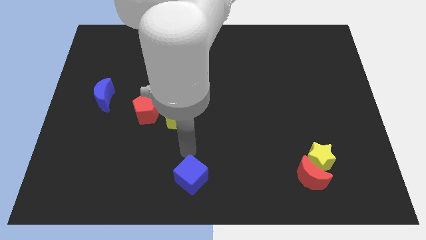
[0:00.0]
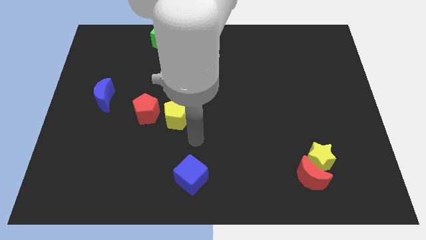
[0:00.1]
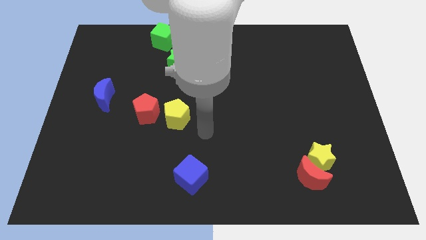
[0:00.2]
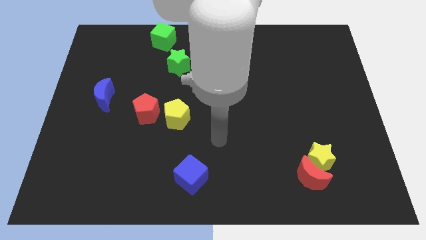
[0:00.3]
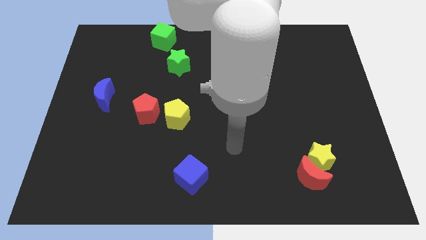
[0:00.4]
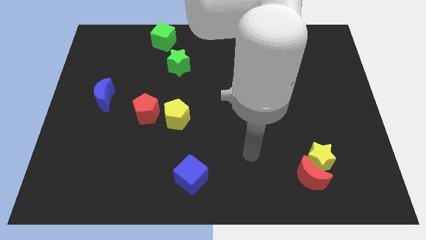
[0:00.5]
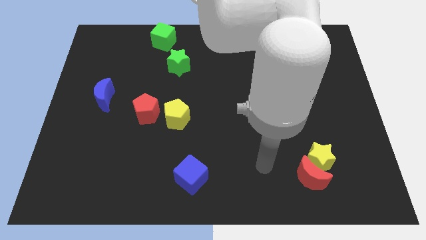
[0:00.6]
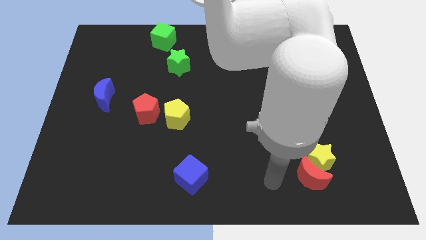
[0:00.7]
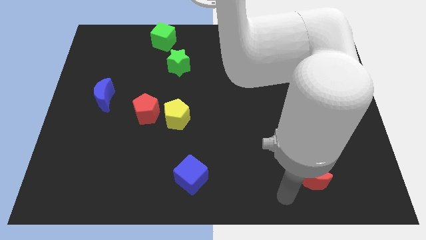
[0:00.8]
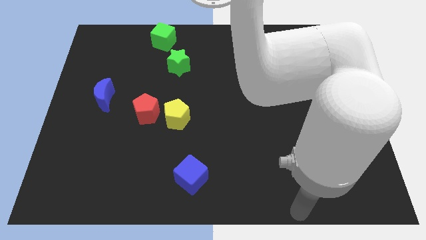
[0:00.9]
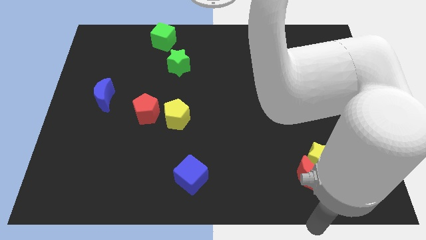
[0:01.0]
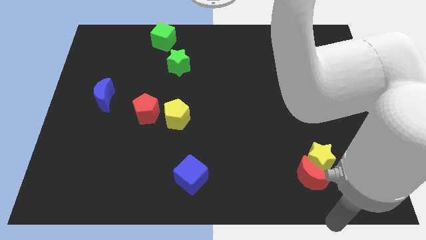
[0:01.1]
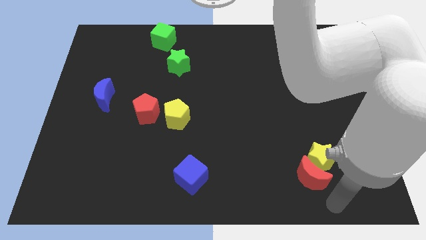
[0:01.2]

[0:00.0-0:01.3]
point your arm below the red moon and yellow star

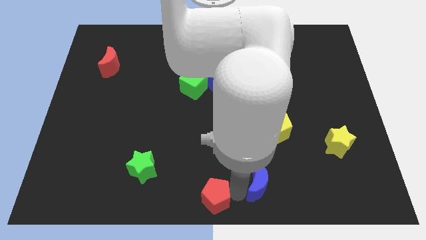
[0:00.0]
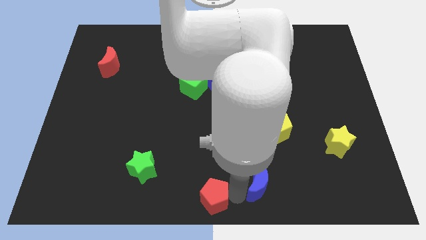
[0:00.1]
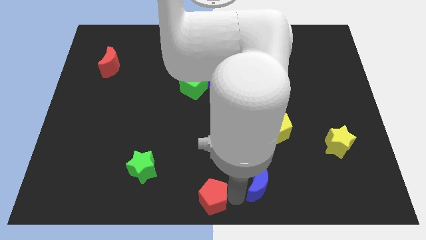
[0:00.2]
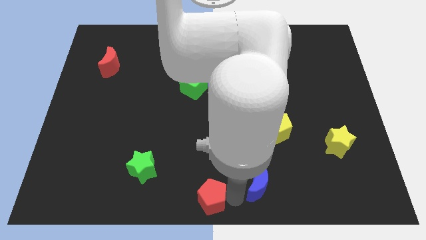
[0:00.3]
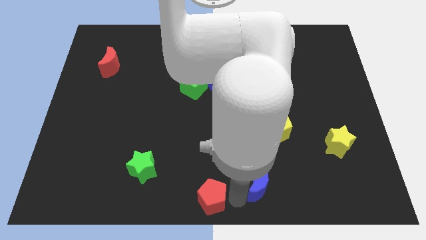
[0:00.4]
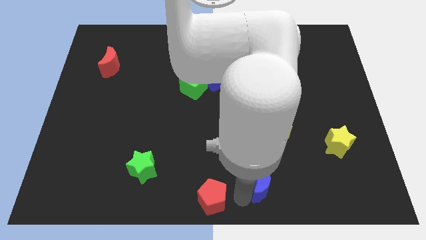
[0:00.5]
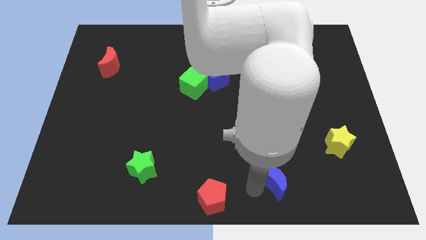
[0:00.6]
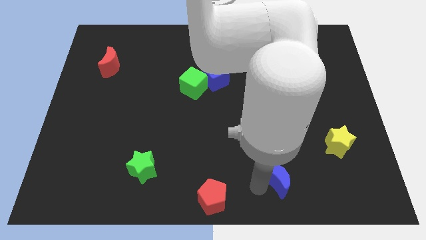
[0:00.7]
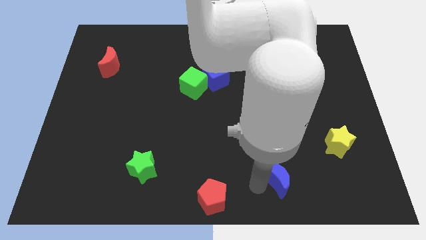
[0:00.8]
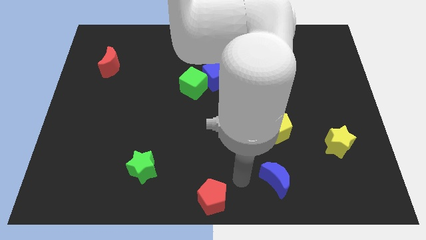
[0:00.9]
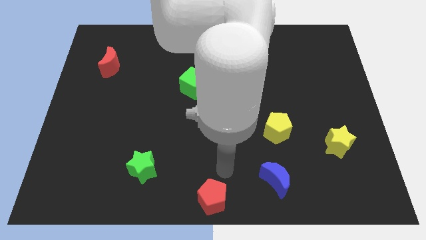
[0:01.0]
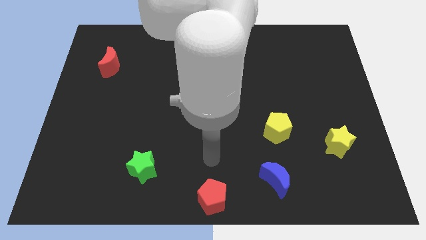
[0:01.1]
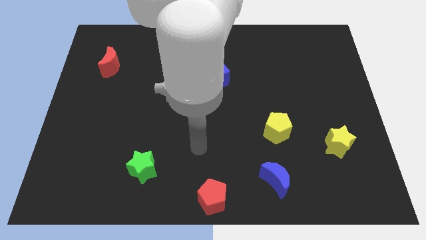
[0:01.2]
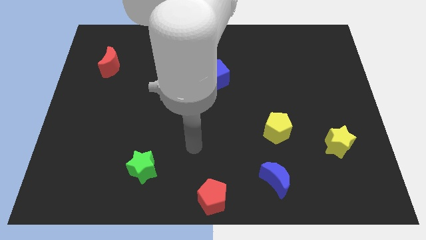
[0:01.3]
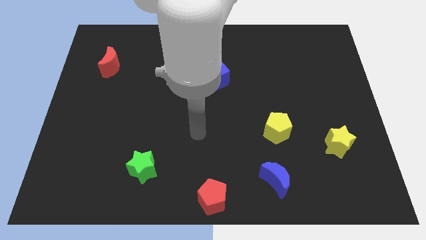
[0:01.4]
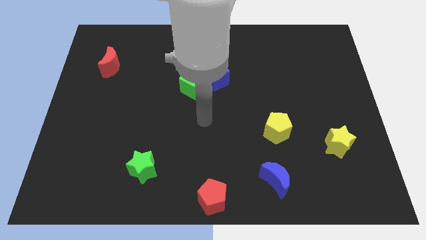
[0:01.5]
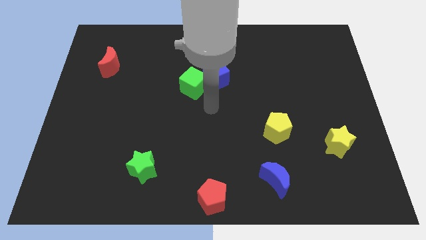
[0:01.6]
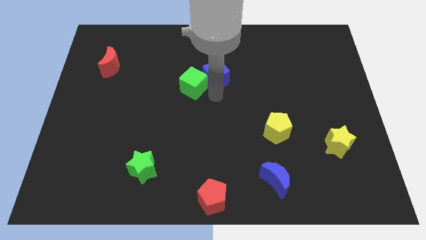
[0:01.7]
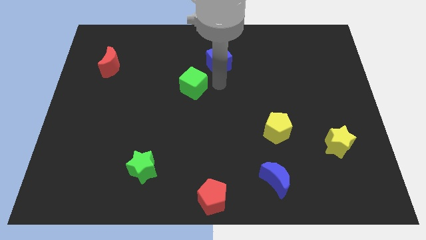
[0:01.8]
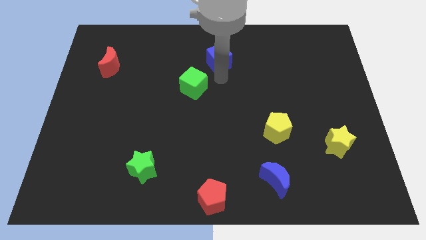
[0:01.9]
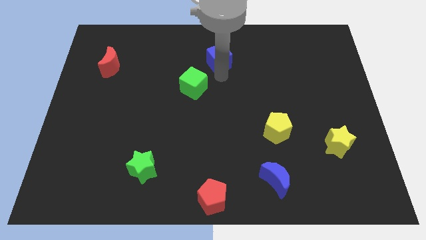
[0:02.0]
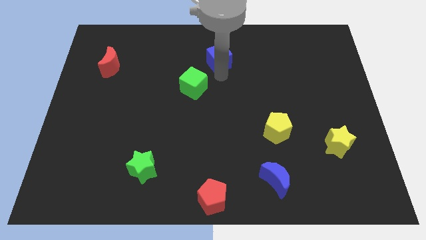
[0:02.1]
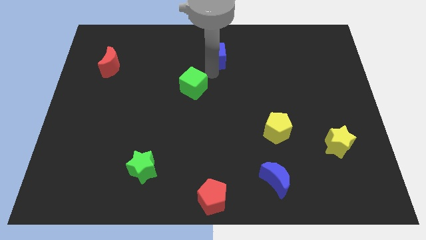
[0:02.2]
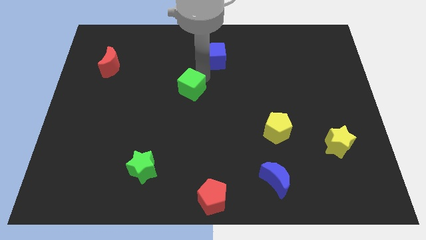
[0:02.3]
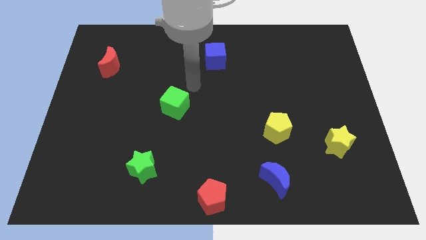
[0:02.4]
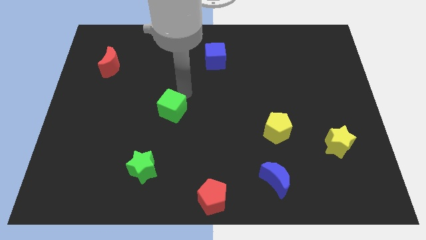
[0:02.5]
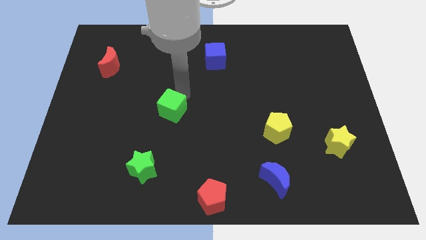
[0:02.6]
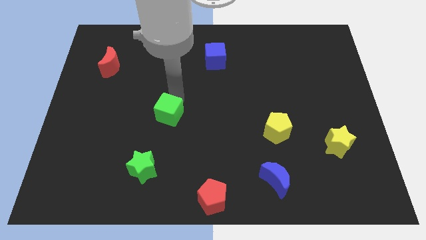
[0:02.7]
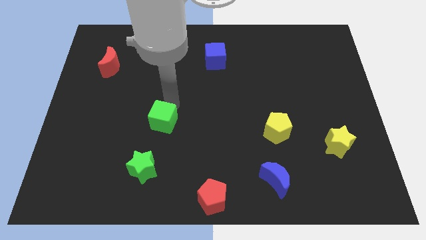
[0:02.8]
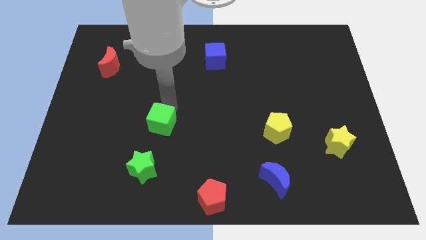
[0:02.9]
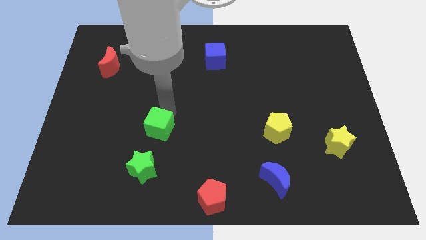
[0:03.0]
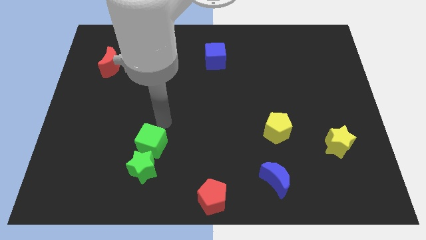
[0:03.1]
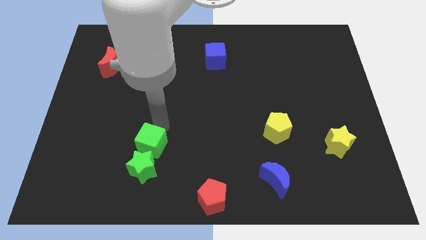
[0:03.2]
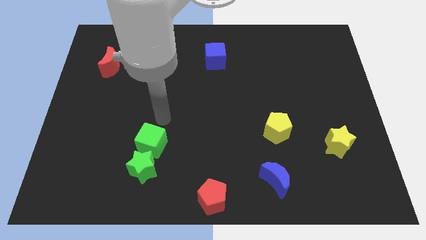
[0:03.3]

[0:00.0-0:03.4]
place the green cube to the top side of the green star

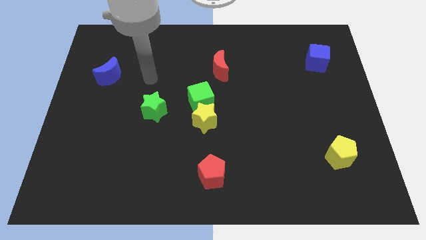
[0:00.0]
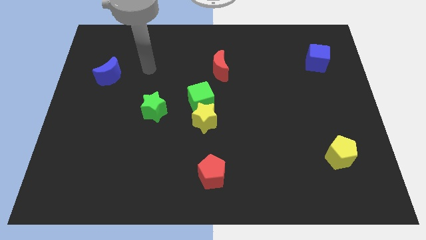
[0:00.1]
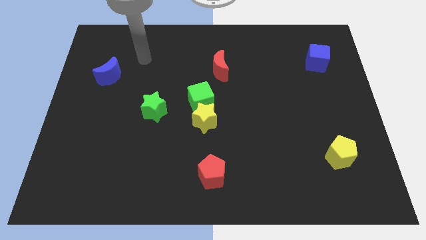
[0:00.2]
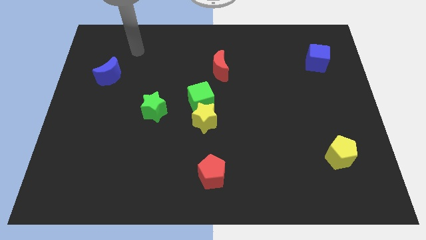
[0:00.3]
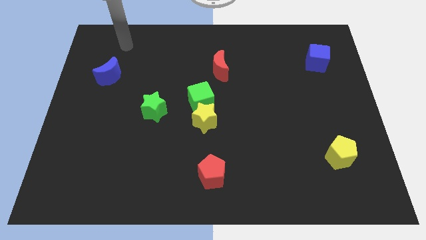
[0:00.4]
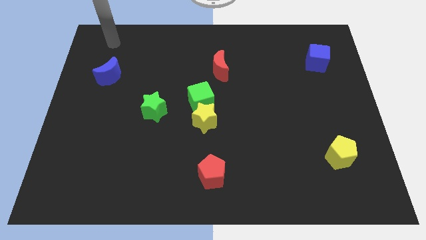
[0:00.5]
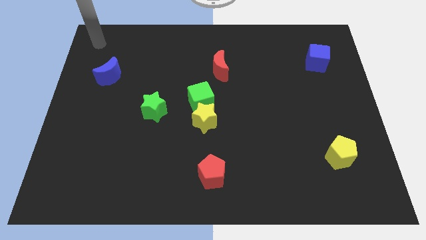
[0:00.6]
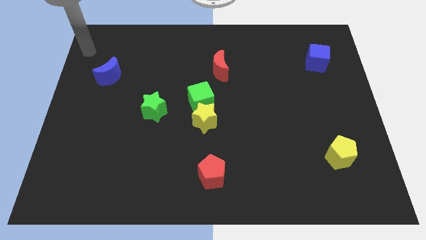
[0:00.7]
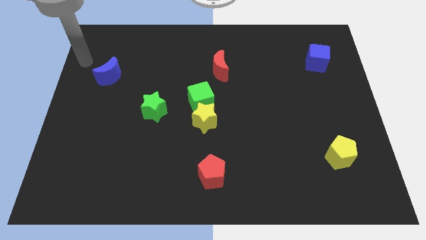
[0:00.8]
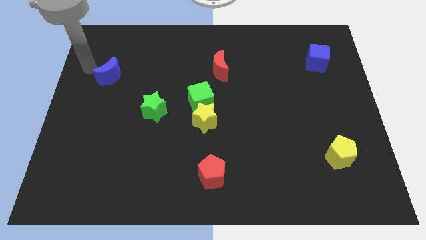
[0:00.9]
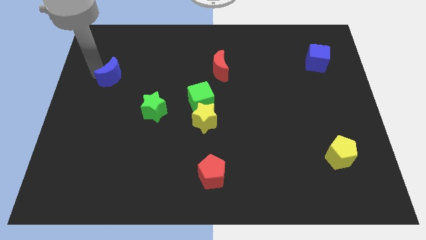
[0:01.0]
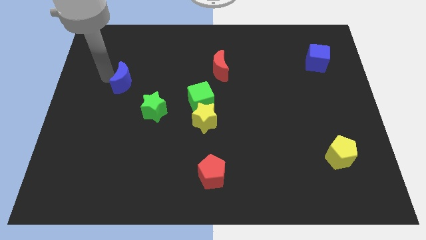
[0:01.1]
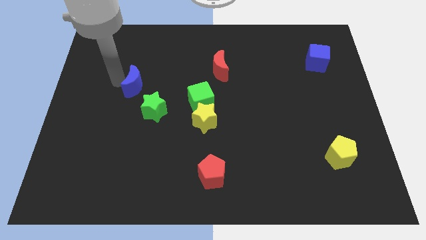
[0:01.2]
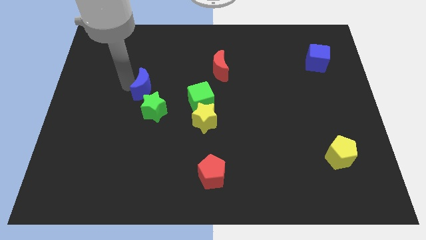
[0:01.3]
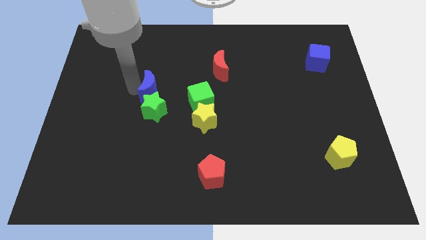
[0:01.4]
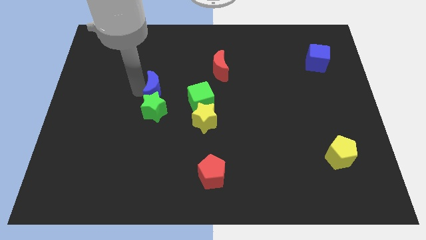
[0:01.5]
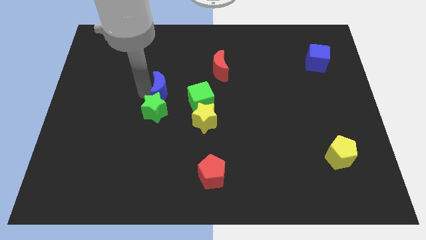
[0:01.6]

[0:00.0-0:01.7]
move the blue crescent into the green star

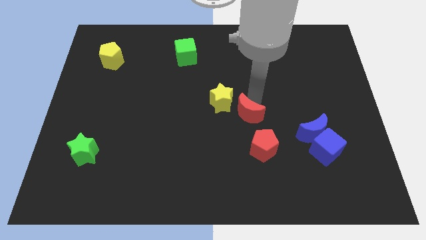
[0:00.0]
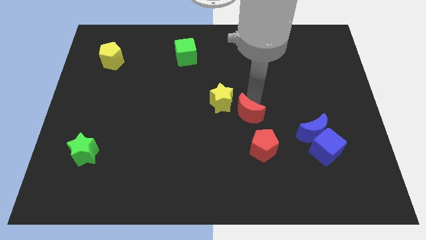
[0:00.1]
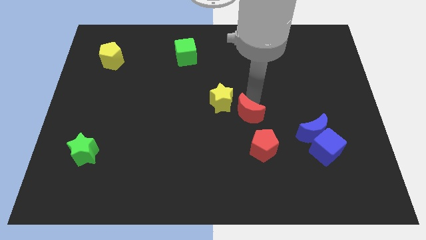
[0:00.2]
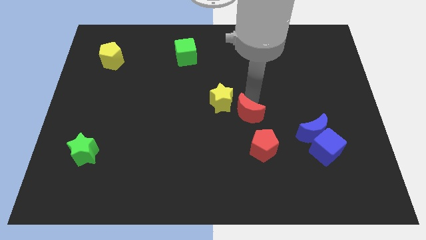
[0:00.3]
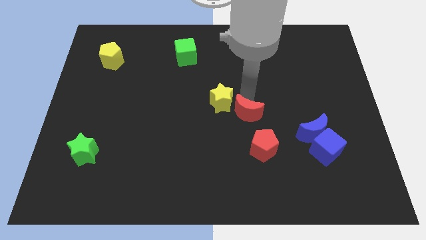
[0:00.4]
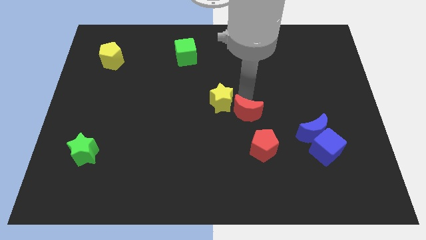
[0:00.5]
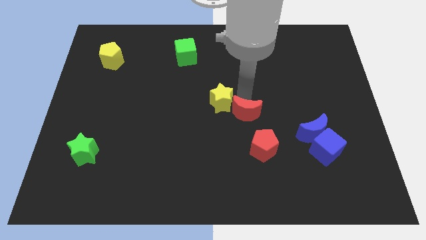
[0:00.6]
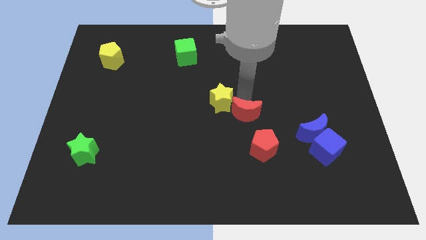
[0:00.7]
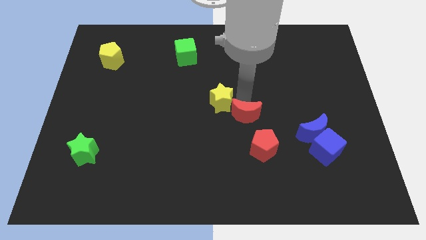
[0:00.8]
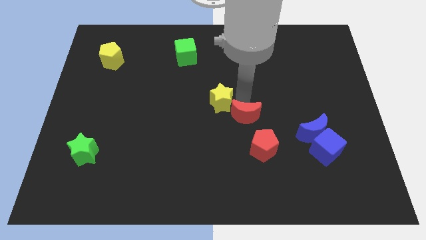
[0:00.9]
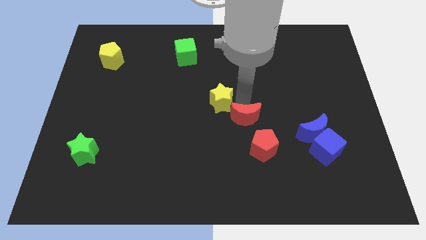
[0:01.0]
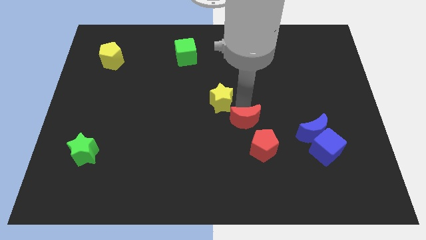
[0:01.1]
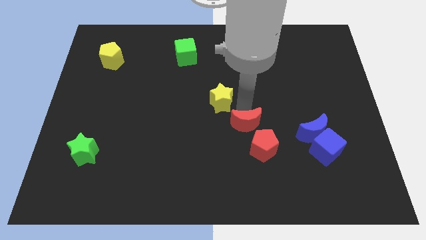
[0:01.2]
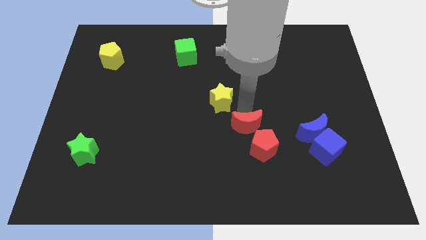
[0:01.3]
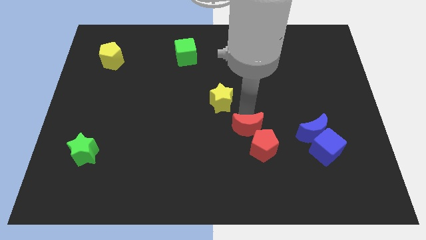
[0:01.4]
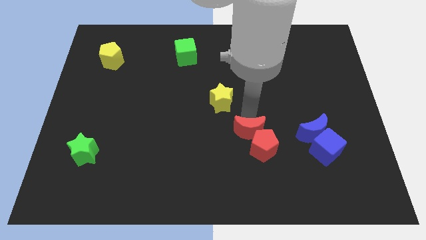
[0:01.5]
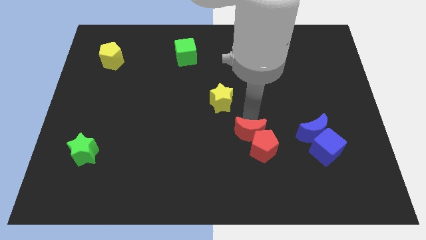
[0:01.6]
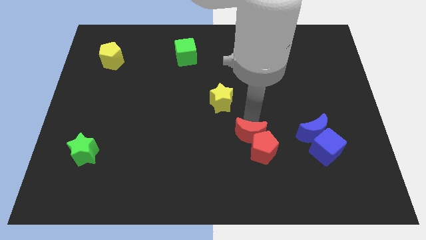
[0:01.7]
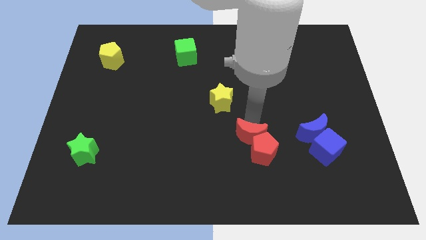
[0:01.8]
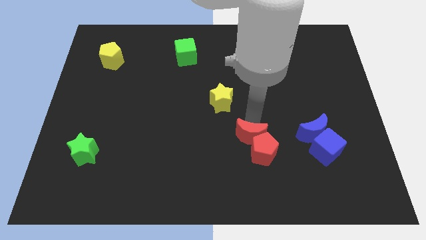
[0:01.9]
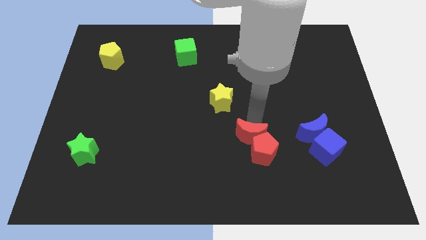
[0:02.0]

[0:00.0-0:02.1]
place red crescent towards red pentagon

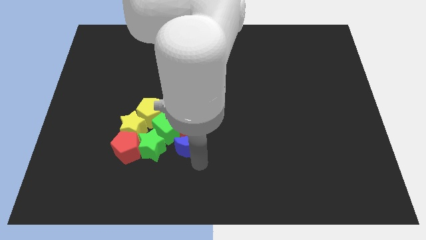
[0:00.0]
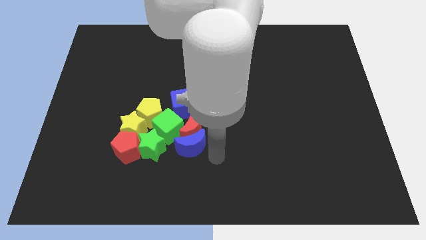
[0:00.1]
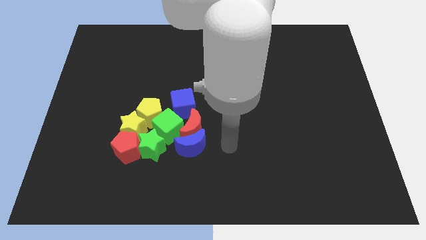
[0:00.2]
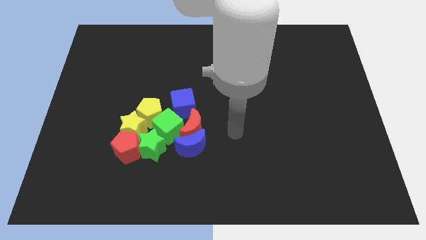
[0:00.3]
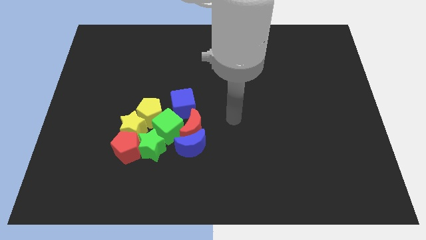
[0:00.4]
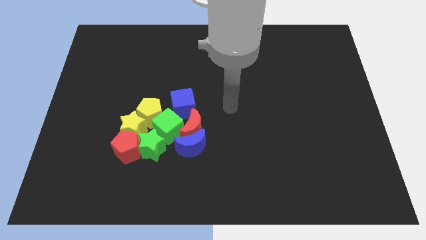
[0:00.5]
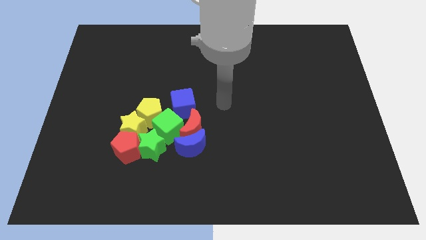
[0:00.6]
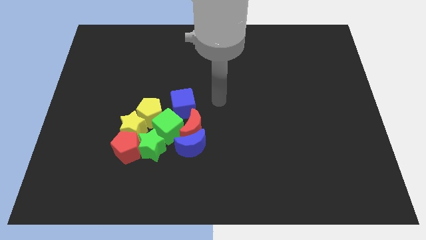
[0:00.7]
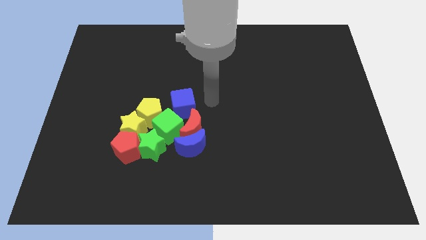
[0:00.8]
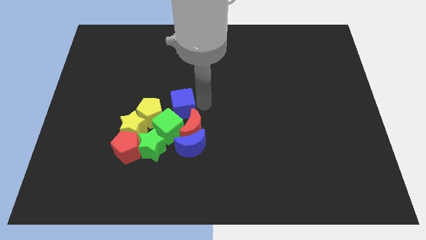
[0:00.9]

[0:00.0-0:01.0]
place your arm to the right of blue cube
